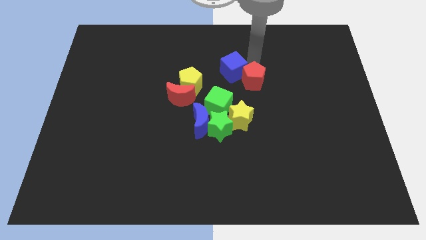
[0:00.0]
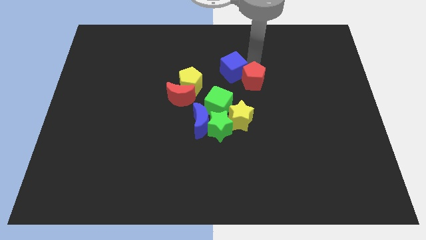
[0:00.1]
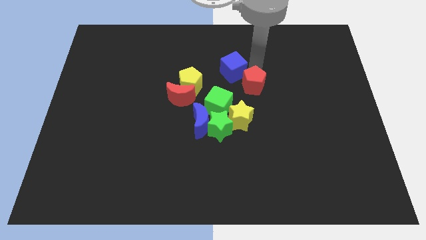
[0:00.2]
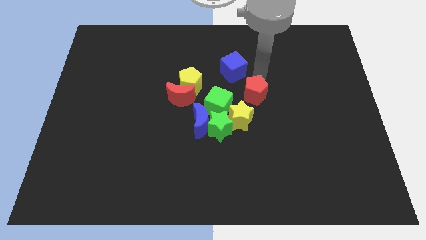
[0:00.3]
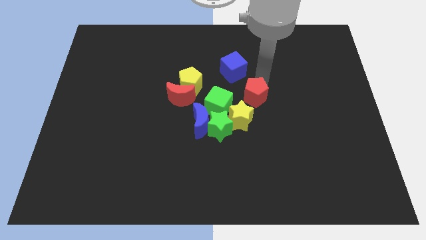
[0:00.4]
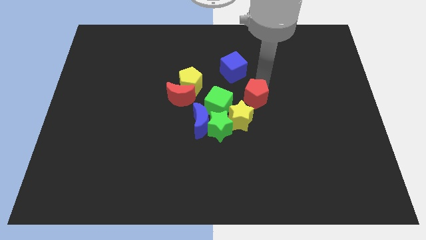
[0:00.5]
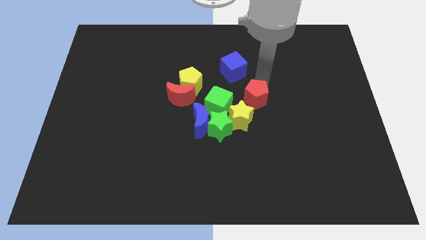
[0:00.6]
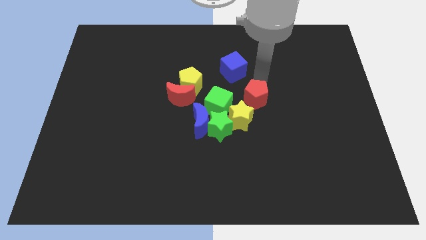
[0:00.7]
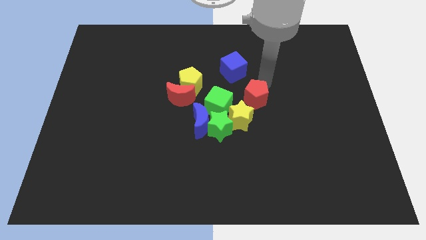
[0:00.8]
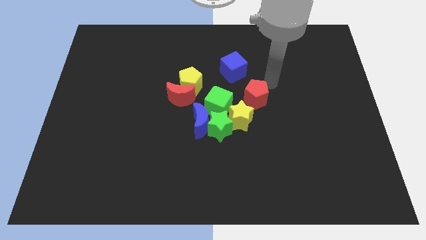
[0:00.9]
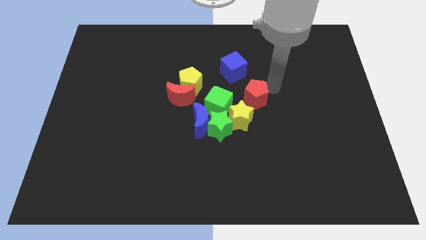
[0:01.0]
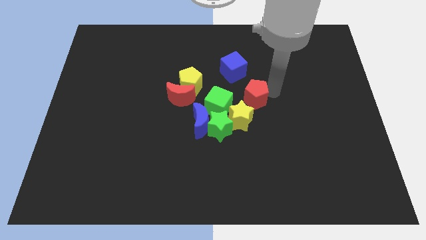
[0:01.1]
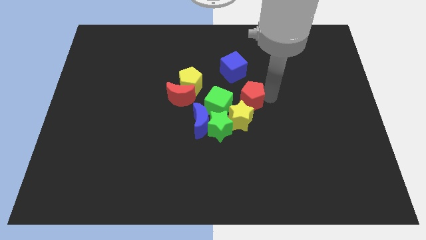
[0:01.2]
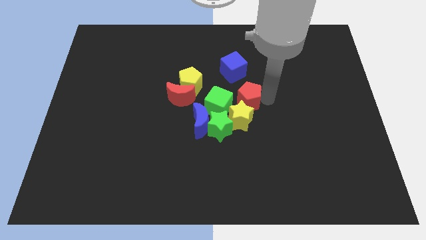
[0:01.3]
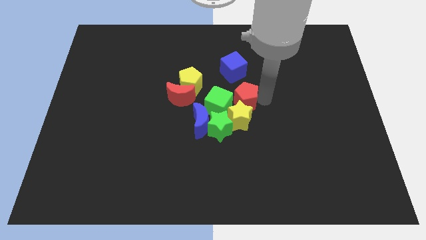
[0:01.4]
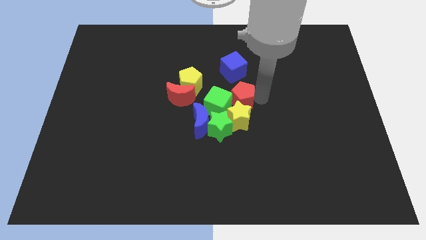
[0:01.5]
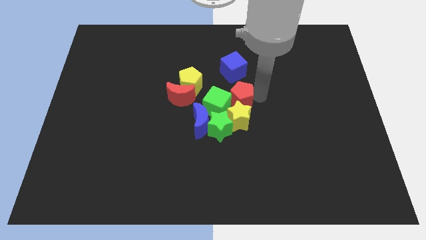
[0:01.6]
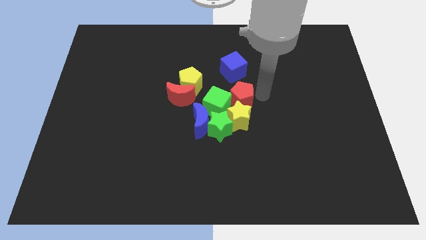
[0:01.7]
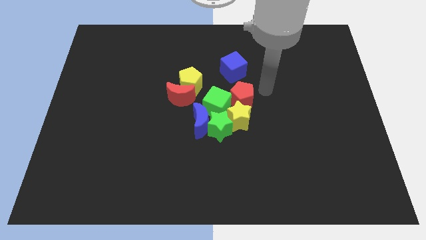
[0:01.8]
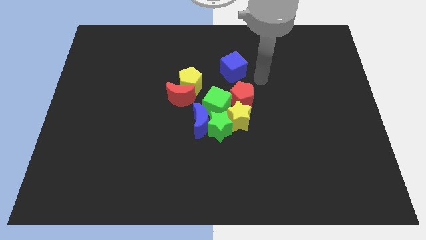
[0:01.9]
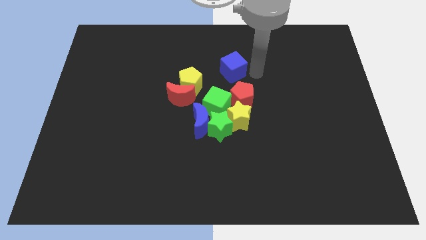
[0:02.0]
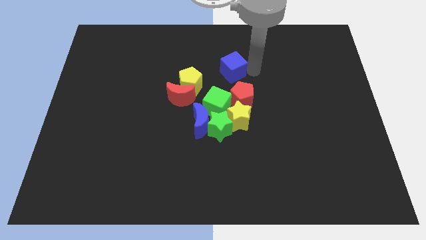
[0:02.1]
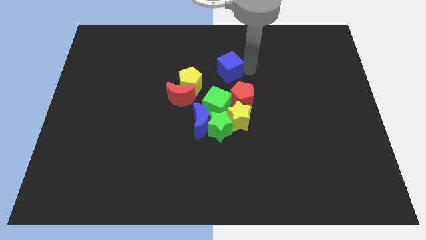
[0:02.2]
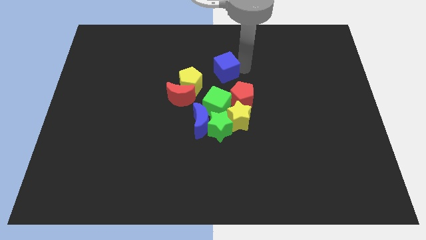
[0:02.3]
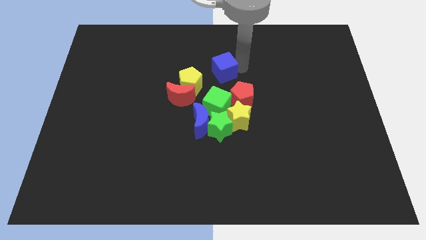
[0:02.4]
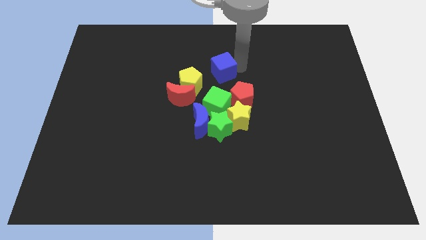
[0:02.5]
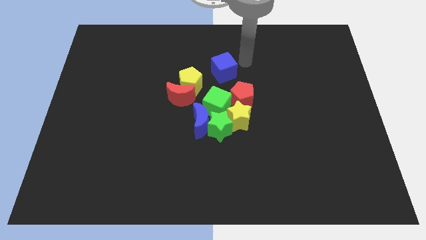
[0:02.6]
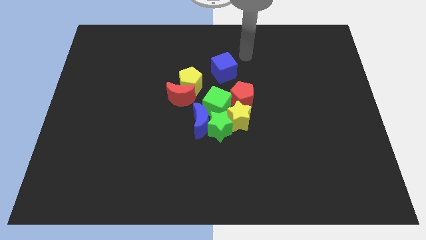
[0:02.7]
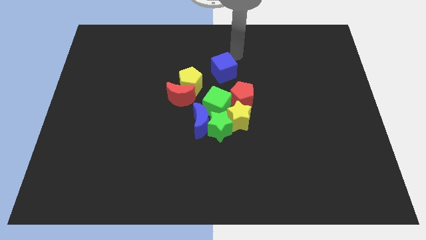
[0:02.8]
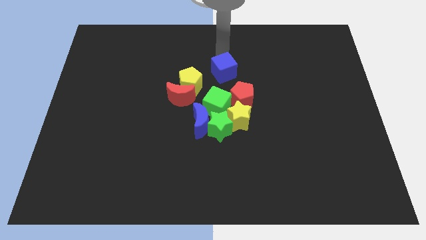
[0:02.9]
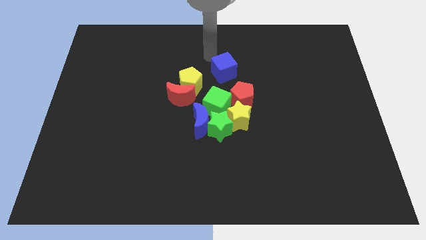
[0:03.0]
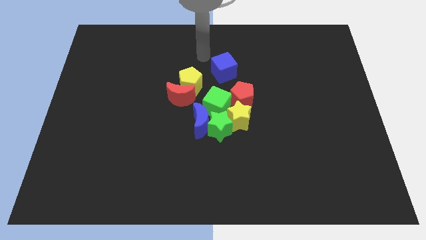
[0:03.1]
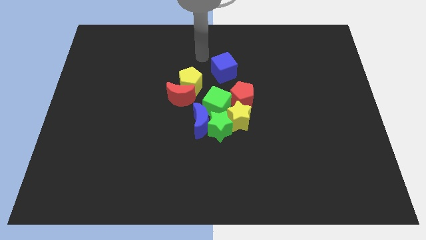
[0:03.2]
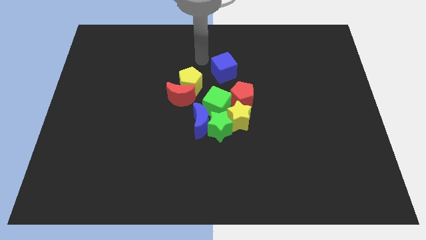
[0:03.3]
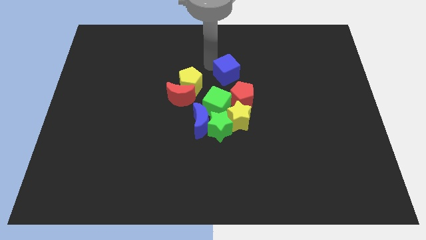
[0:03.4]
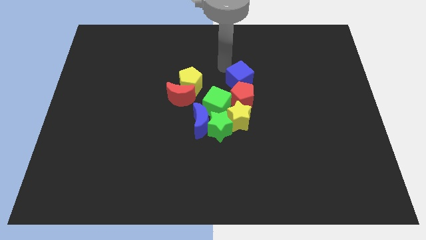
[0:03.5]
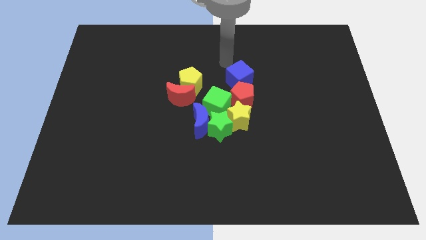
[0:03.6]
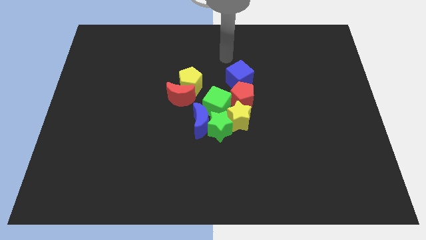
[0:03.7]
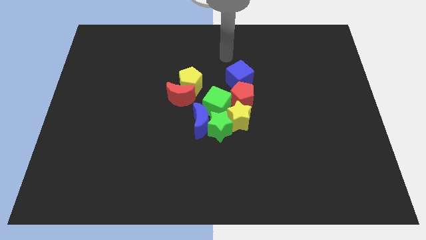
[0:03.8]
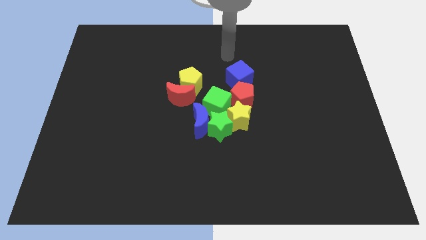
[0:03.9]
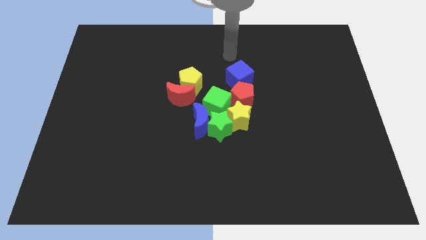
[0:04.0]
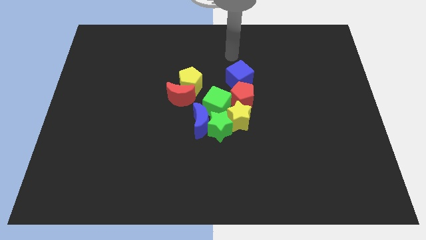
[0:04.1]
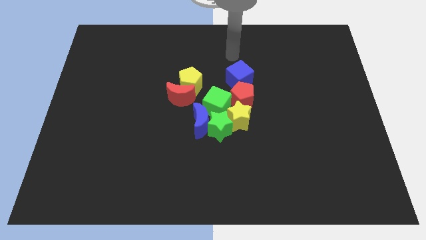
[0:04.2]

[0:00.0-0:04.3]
adjust the red pentagon and blue cube vertical to each other

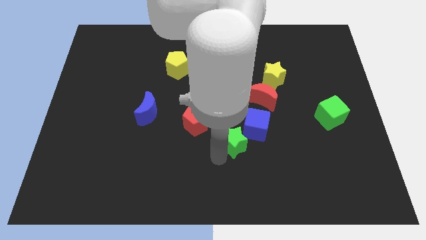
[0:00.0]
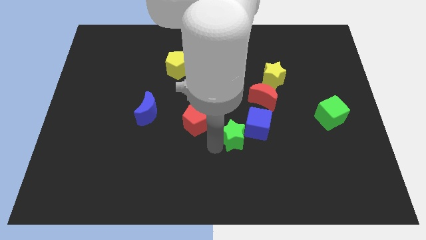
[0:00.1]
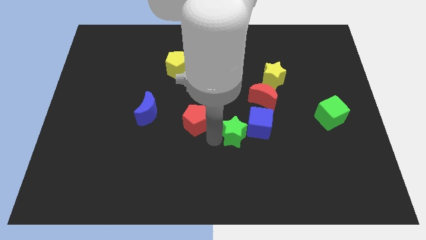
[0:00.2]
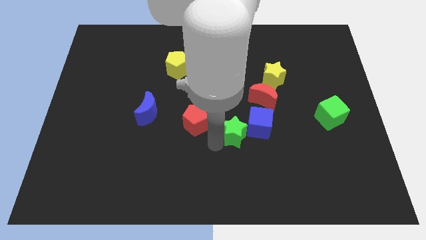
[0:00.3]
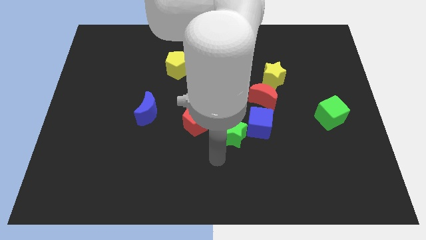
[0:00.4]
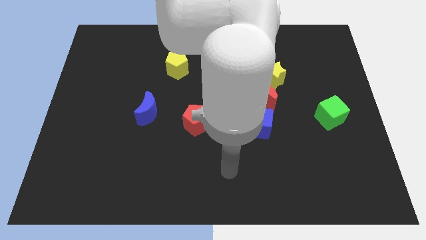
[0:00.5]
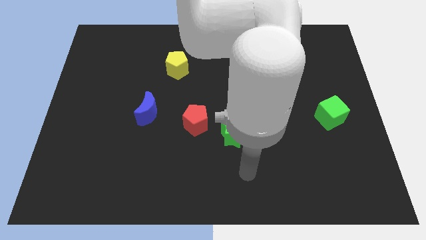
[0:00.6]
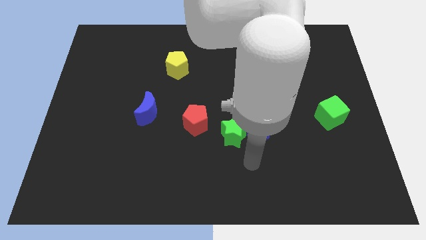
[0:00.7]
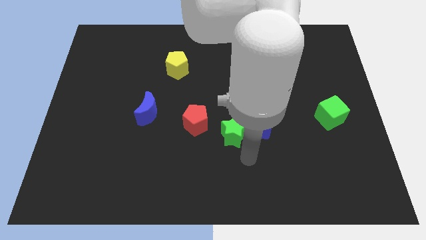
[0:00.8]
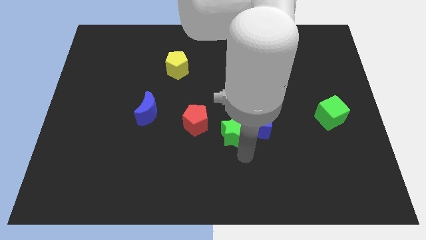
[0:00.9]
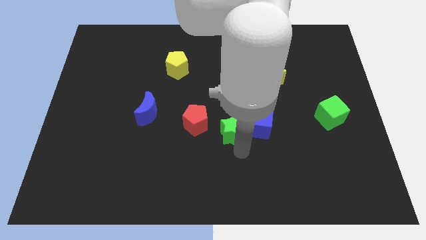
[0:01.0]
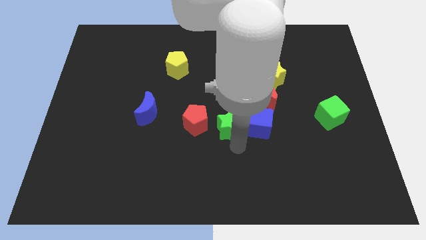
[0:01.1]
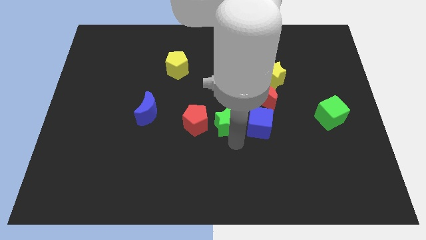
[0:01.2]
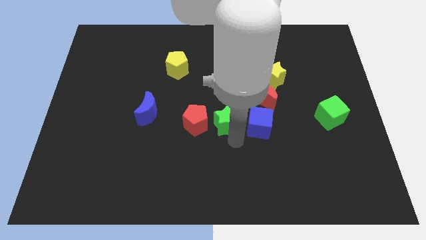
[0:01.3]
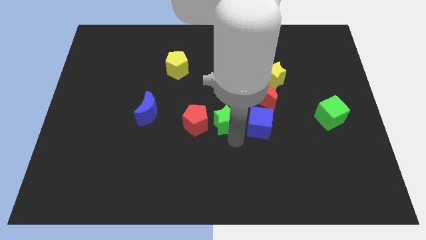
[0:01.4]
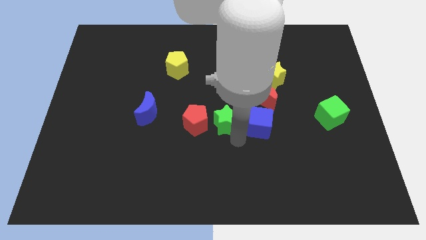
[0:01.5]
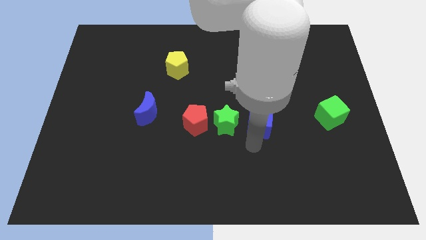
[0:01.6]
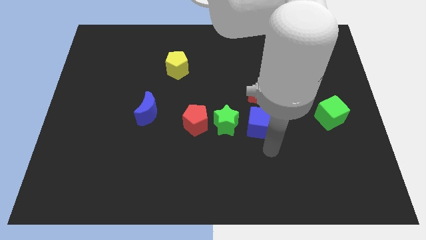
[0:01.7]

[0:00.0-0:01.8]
put the green star to the right of the red pentagon

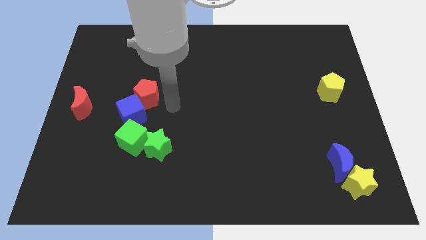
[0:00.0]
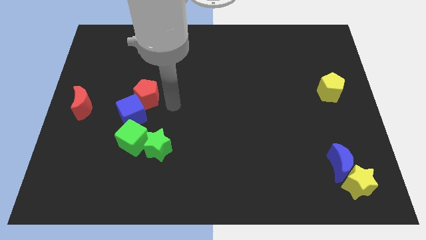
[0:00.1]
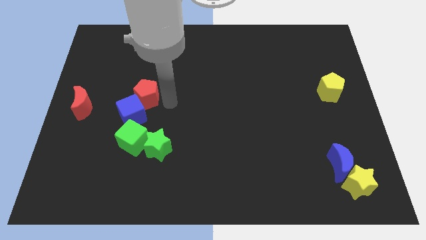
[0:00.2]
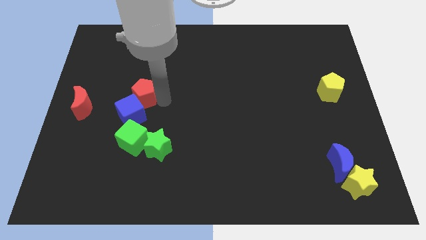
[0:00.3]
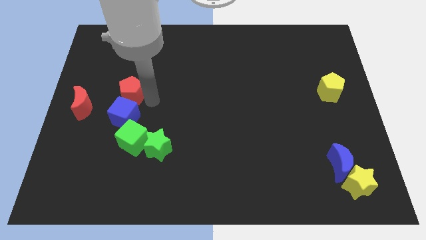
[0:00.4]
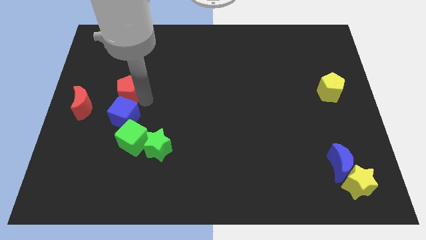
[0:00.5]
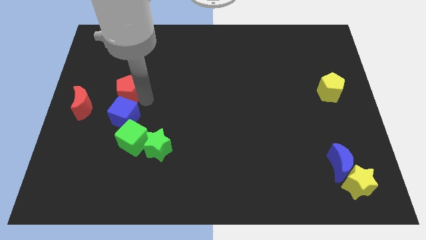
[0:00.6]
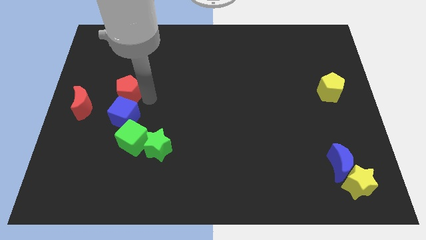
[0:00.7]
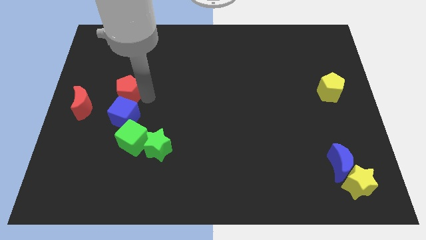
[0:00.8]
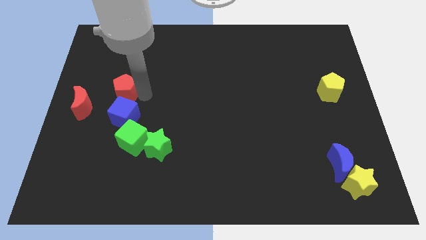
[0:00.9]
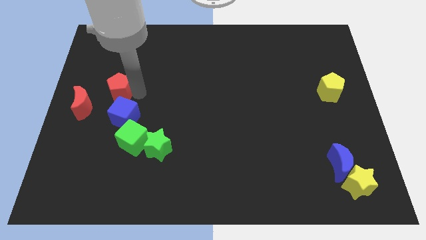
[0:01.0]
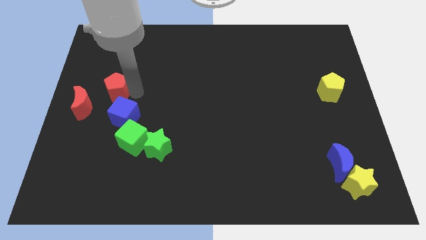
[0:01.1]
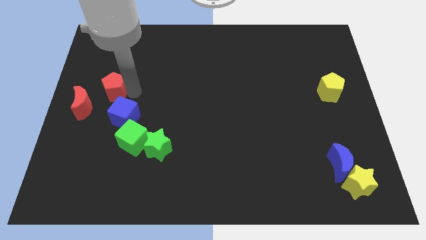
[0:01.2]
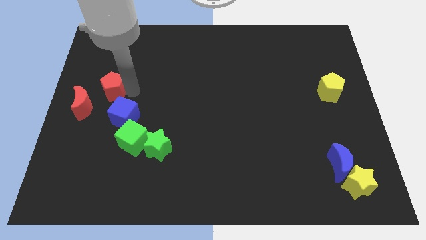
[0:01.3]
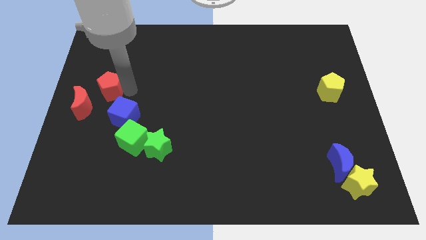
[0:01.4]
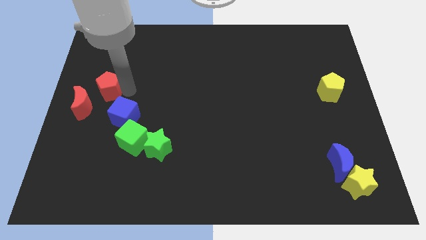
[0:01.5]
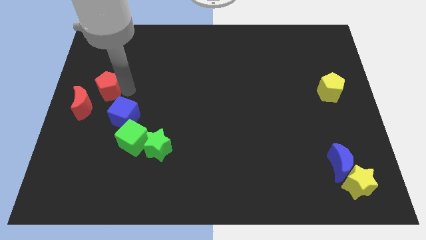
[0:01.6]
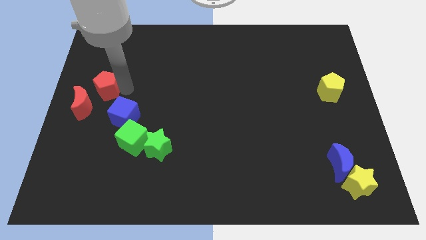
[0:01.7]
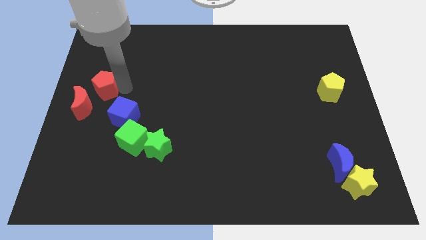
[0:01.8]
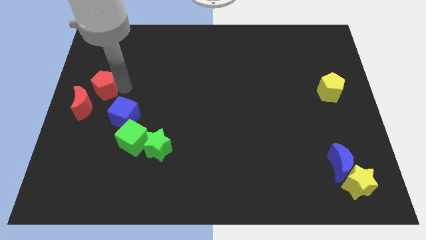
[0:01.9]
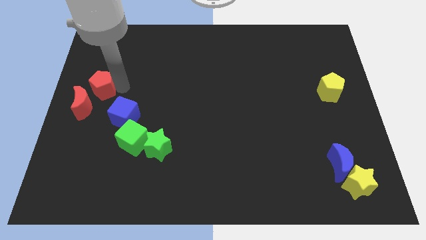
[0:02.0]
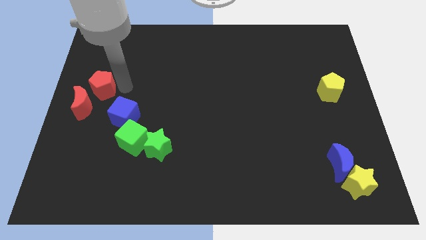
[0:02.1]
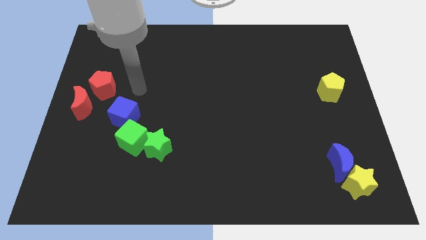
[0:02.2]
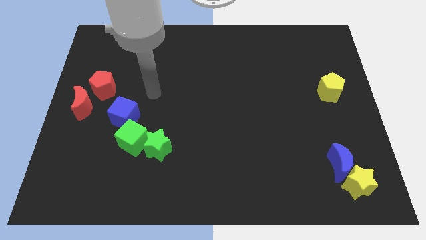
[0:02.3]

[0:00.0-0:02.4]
place the red pentagon above the red moon

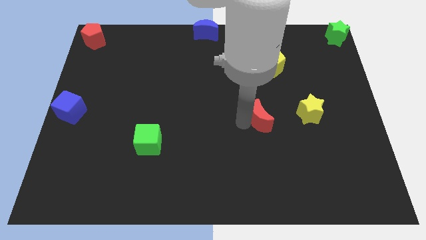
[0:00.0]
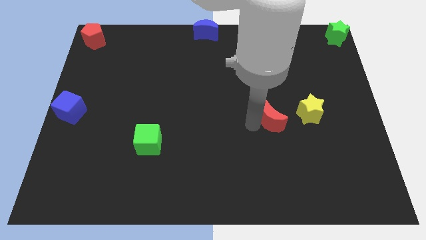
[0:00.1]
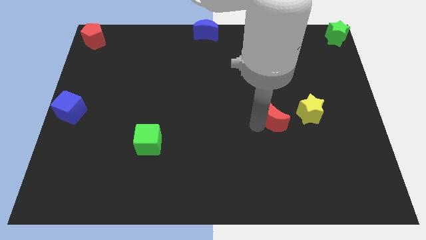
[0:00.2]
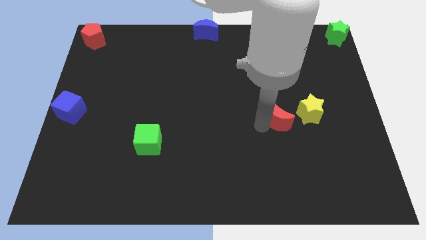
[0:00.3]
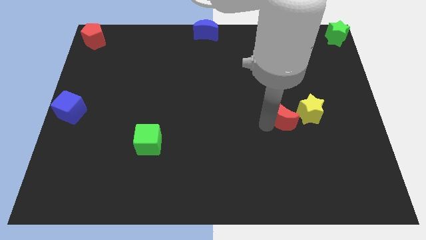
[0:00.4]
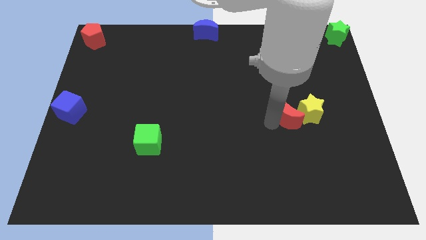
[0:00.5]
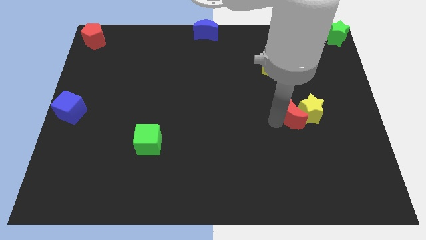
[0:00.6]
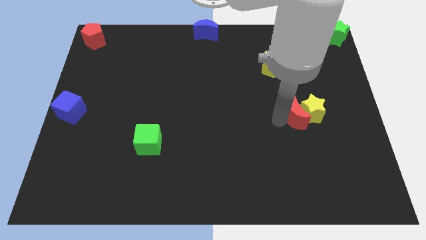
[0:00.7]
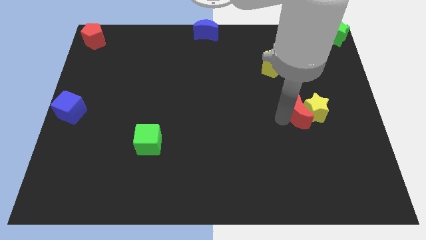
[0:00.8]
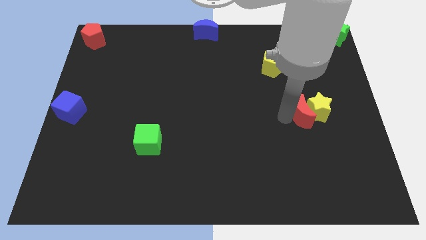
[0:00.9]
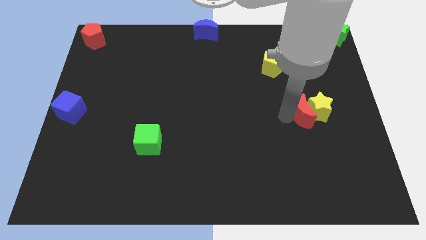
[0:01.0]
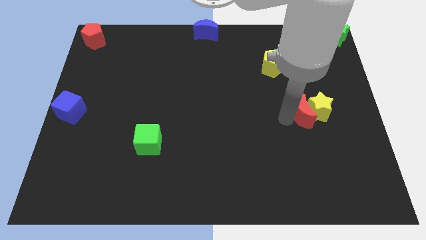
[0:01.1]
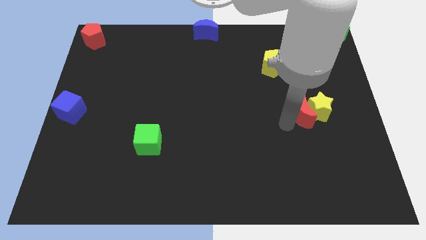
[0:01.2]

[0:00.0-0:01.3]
push red moon towards the yellow star
